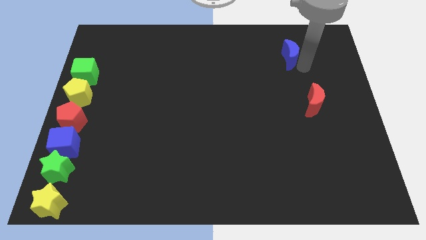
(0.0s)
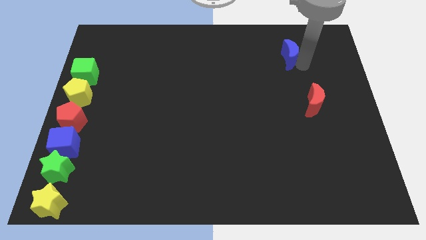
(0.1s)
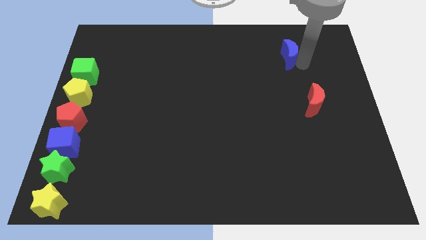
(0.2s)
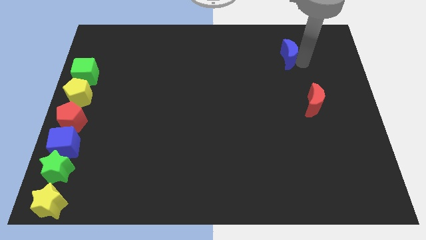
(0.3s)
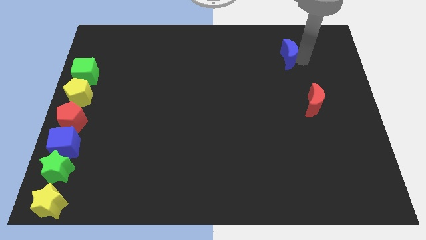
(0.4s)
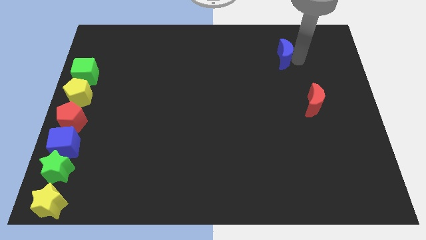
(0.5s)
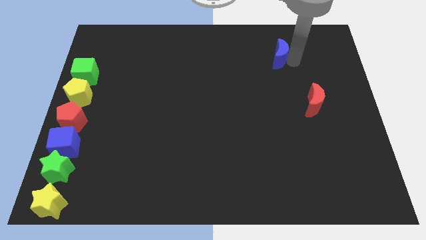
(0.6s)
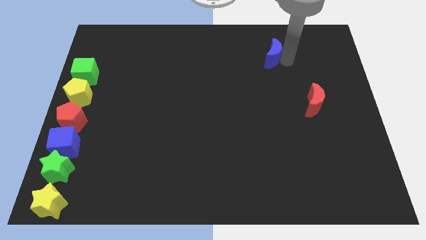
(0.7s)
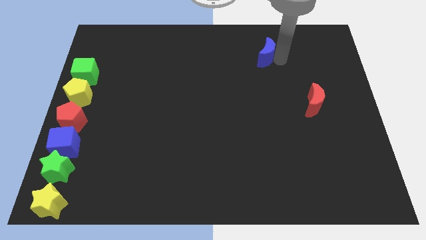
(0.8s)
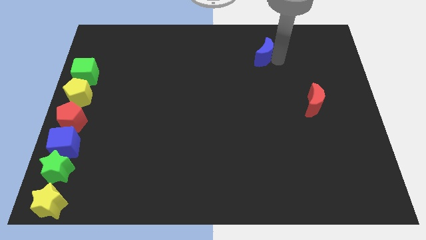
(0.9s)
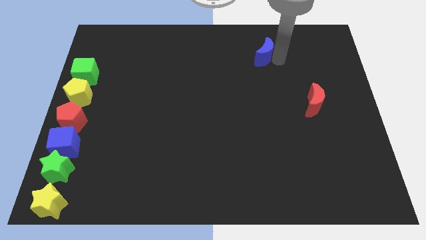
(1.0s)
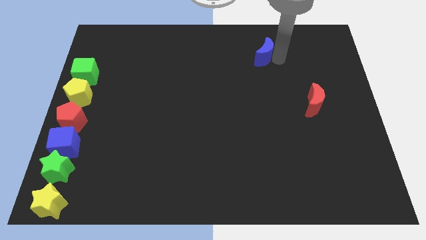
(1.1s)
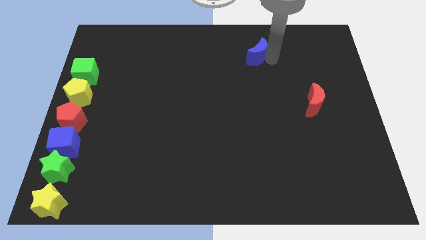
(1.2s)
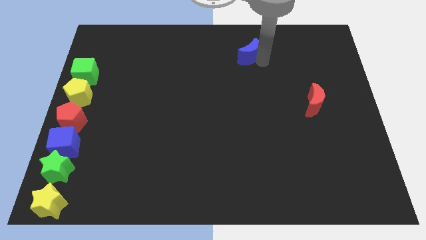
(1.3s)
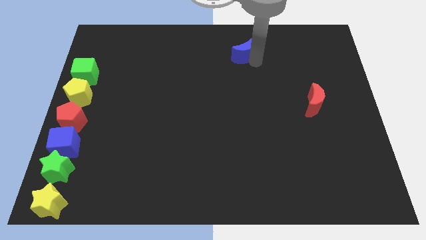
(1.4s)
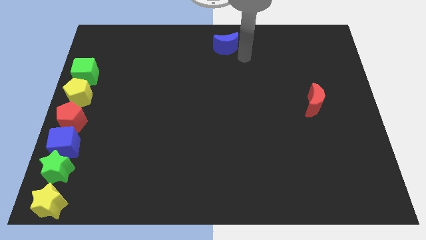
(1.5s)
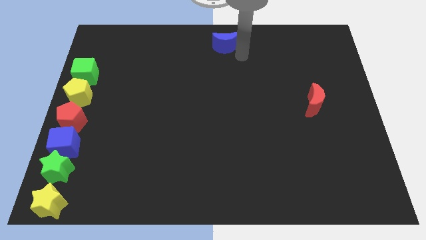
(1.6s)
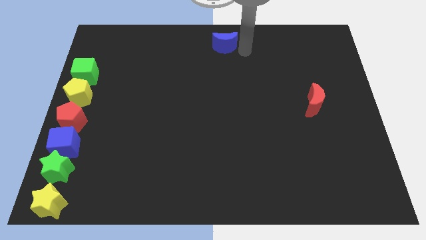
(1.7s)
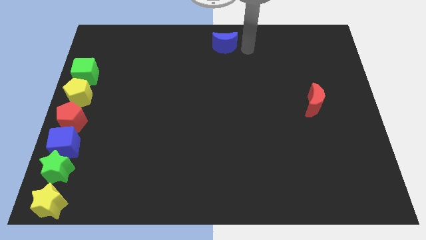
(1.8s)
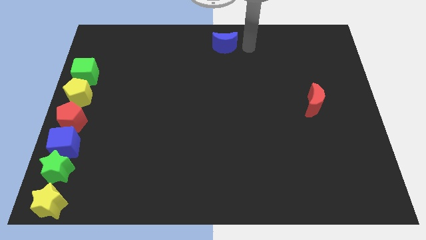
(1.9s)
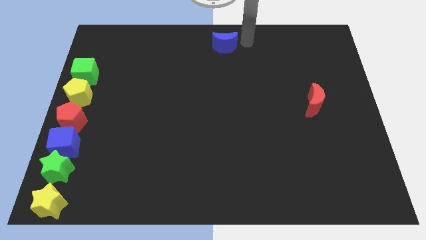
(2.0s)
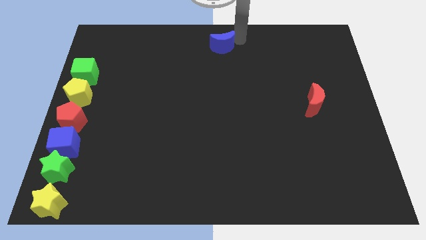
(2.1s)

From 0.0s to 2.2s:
push blue moon towards the top center

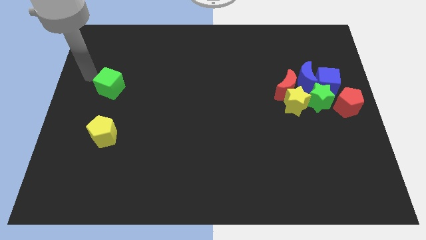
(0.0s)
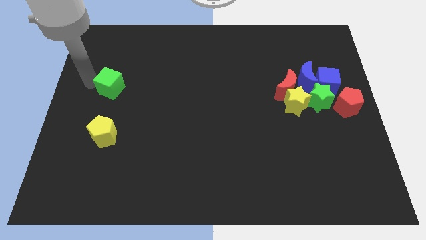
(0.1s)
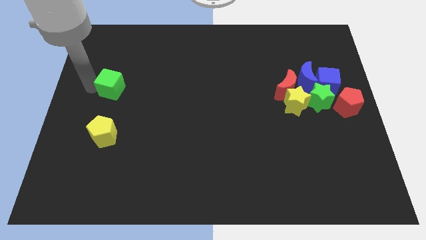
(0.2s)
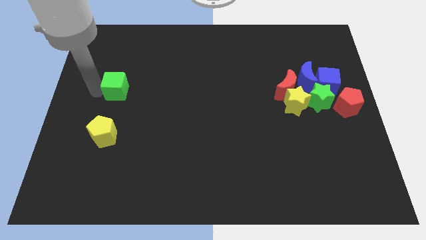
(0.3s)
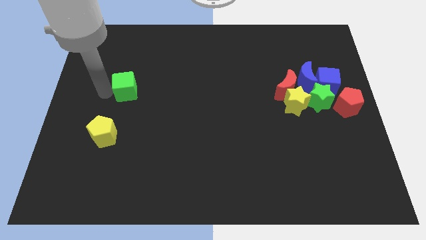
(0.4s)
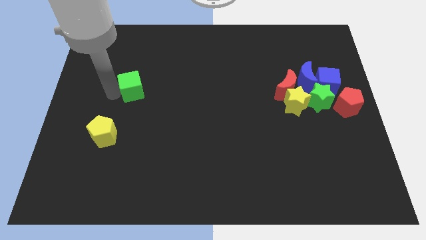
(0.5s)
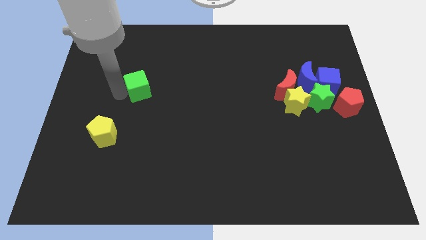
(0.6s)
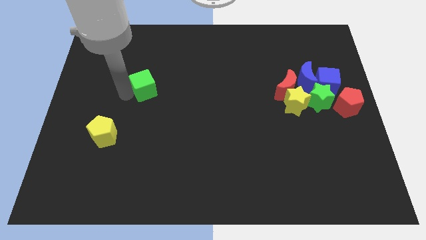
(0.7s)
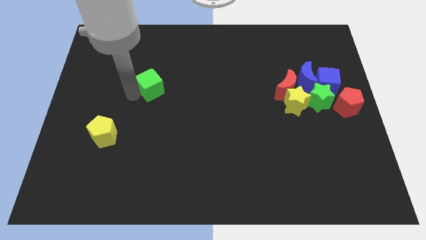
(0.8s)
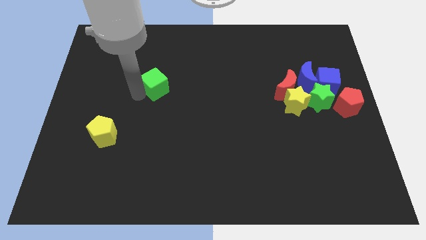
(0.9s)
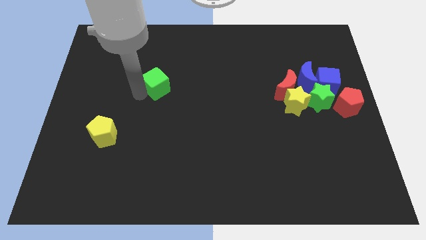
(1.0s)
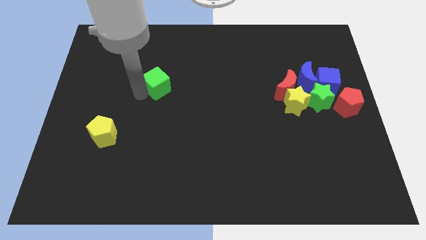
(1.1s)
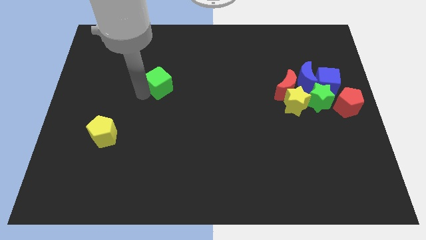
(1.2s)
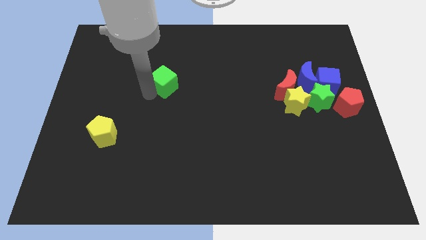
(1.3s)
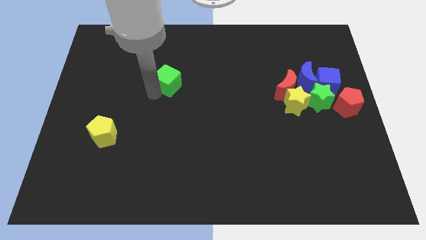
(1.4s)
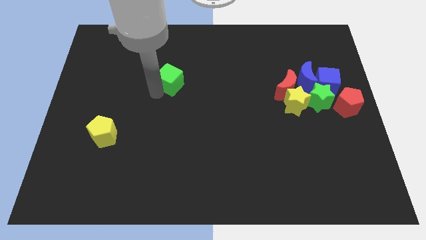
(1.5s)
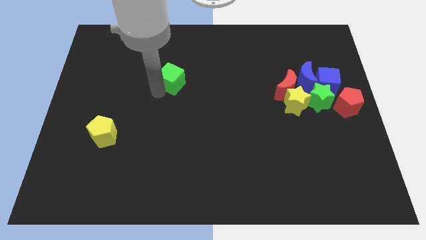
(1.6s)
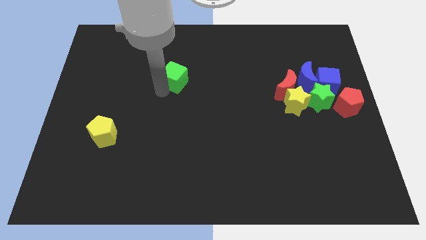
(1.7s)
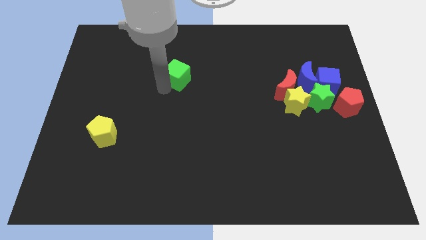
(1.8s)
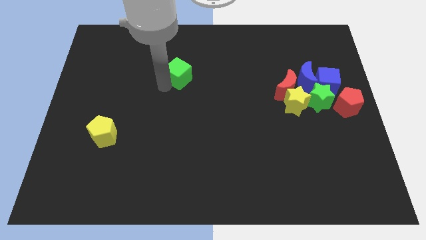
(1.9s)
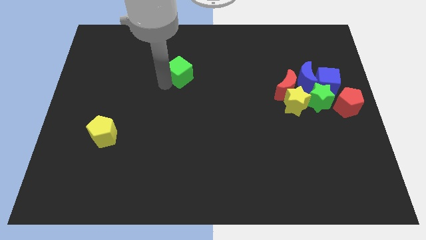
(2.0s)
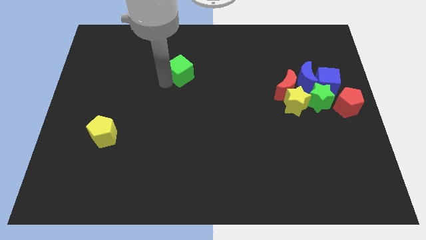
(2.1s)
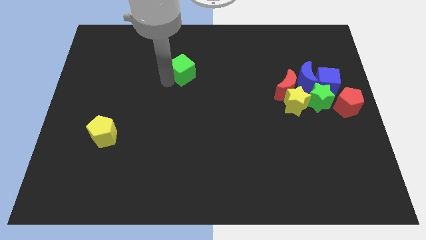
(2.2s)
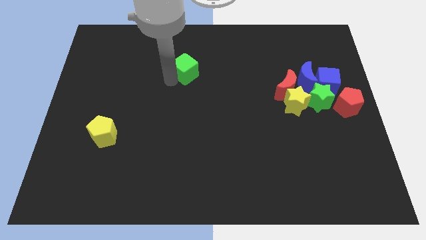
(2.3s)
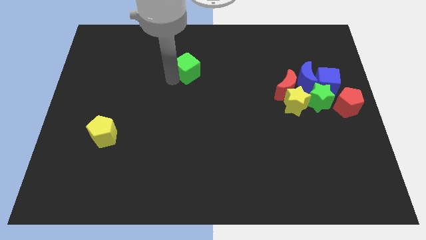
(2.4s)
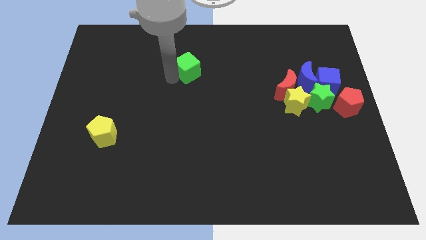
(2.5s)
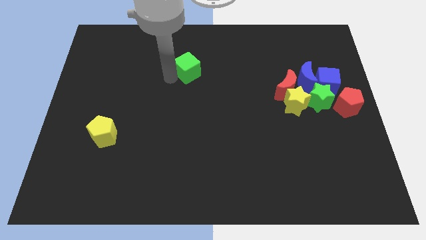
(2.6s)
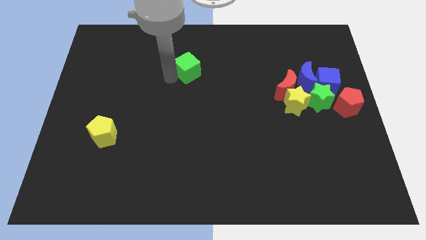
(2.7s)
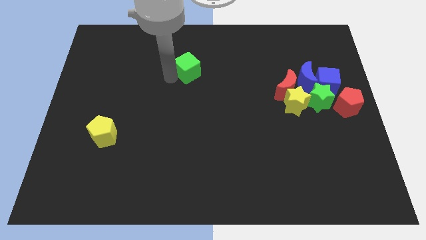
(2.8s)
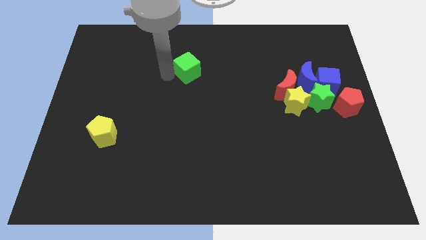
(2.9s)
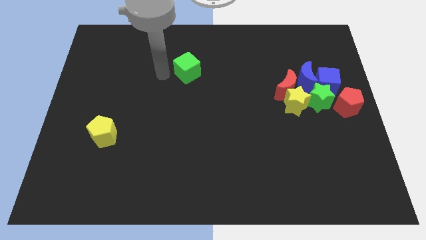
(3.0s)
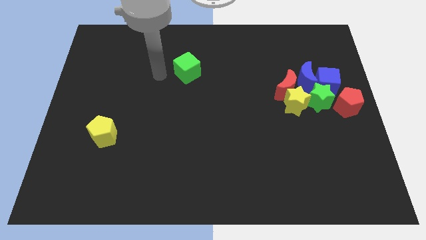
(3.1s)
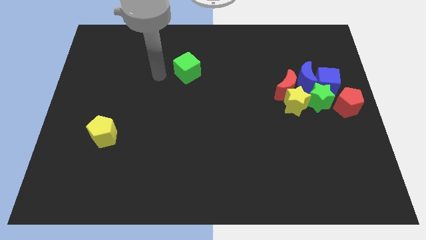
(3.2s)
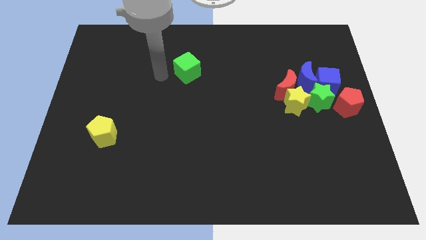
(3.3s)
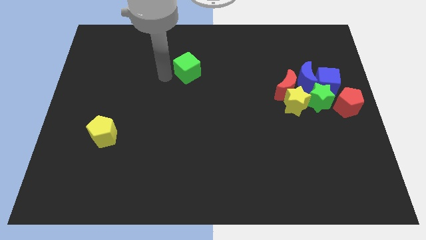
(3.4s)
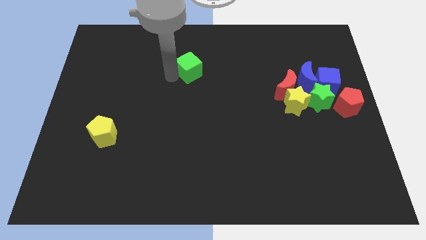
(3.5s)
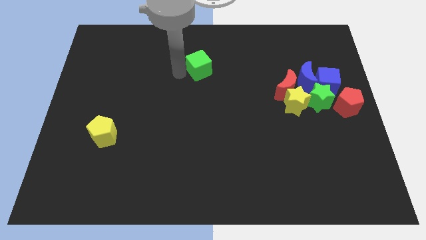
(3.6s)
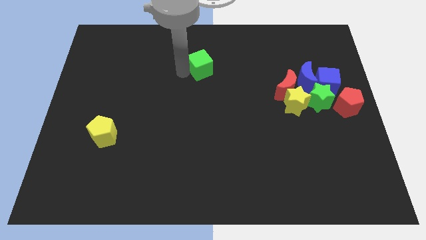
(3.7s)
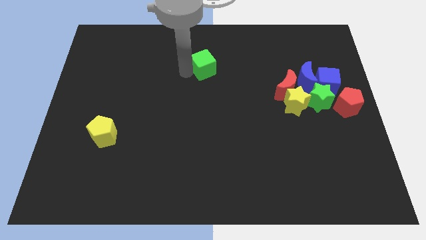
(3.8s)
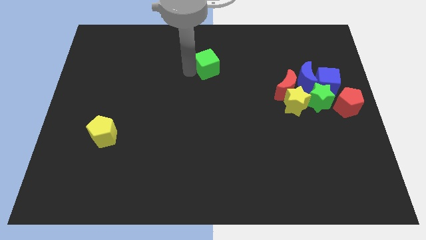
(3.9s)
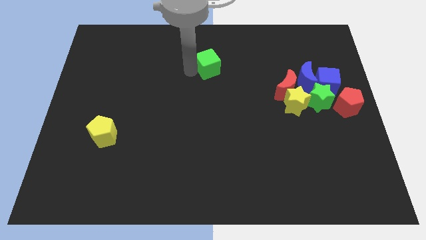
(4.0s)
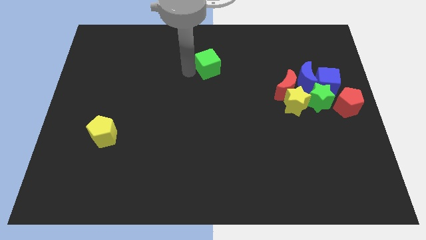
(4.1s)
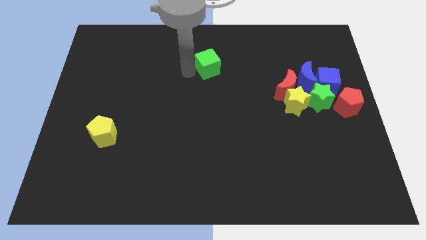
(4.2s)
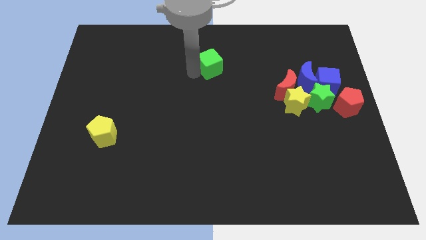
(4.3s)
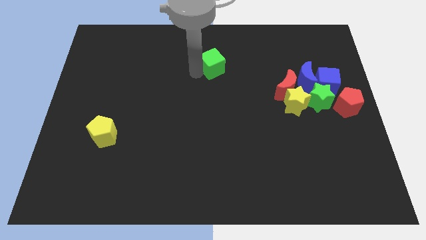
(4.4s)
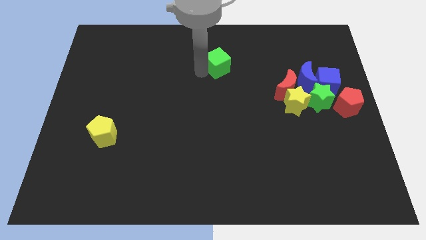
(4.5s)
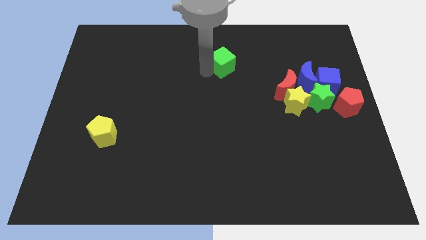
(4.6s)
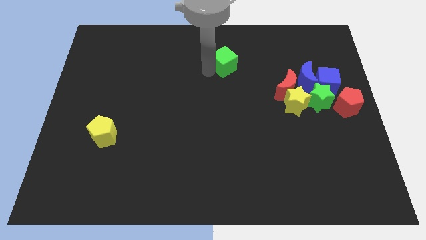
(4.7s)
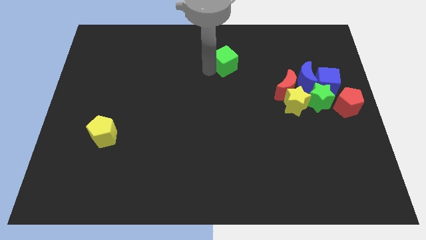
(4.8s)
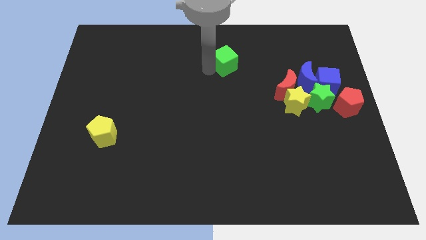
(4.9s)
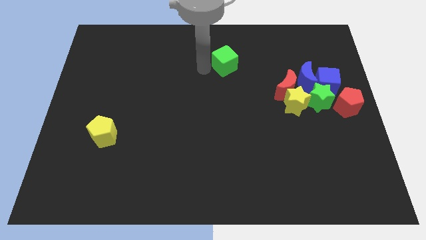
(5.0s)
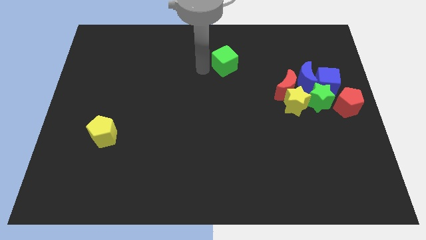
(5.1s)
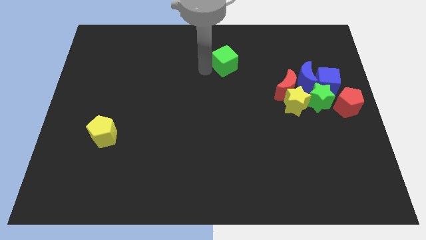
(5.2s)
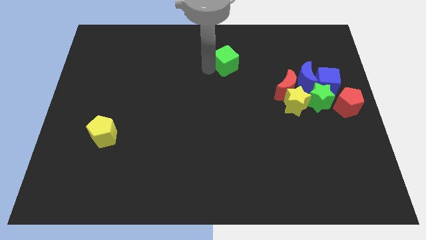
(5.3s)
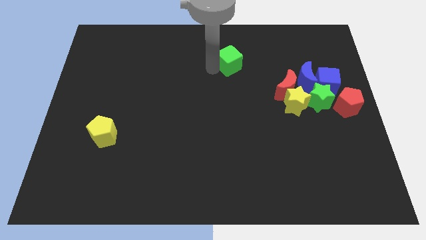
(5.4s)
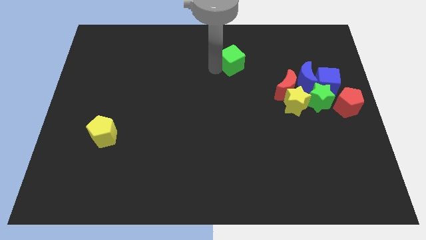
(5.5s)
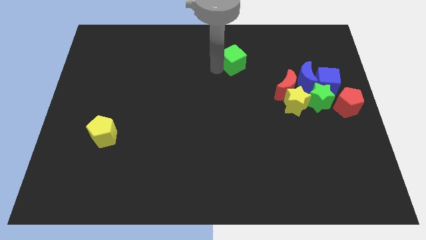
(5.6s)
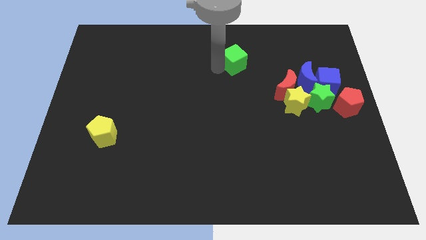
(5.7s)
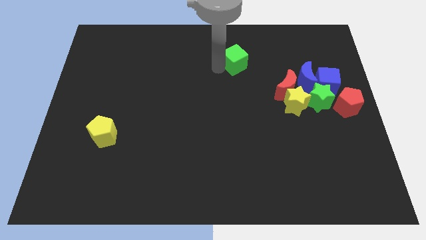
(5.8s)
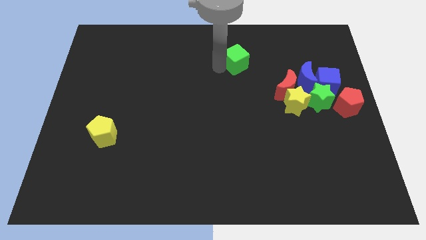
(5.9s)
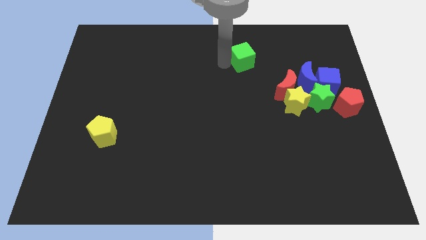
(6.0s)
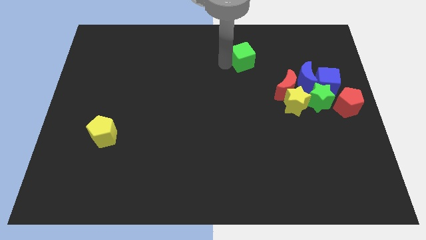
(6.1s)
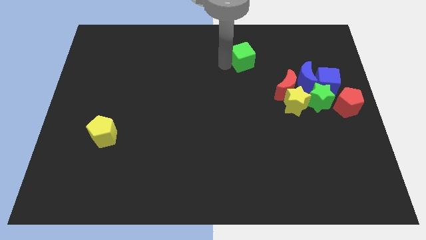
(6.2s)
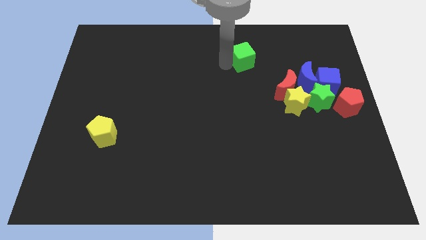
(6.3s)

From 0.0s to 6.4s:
push the green cube to the right

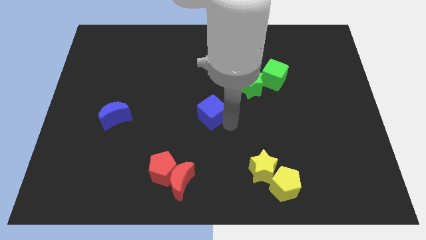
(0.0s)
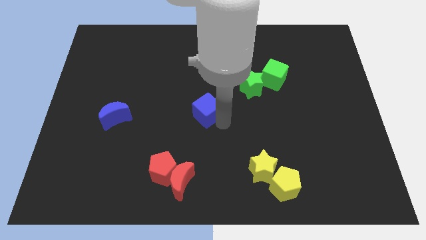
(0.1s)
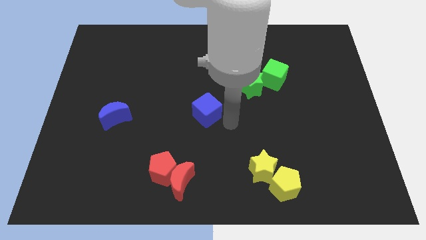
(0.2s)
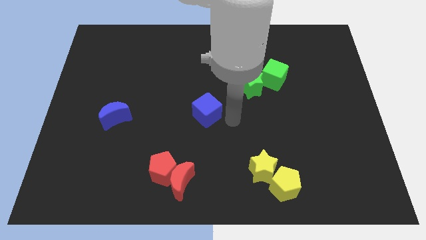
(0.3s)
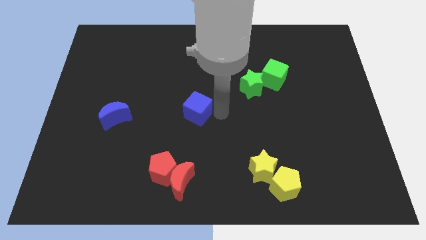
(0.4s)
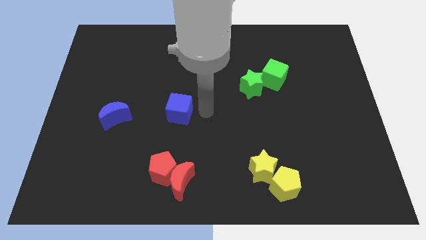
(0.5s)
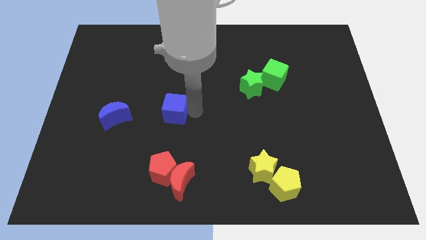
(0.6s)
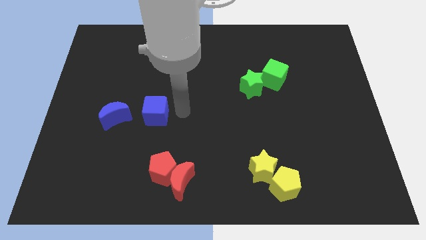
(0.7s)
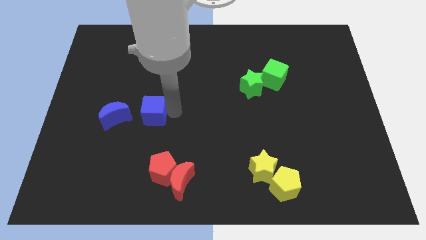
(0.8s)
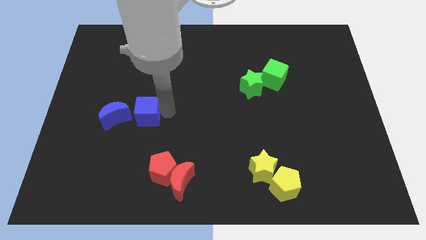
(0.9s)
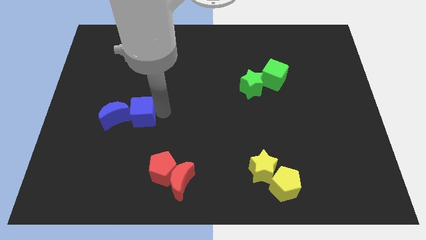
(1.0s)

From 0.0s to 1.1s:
move the blue cube to the right of the blue crescent
